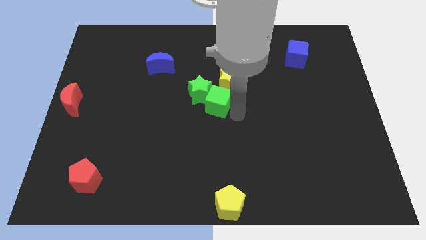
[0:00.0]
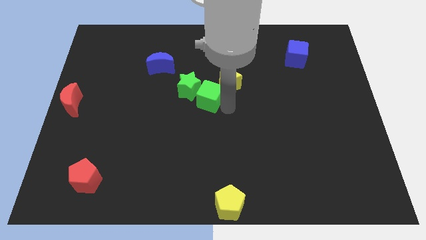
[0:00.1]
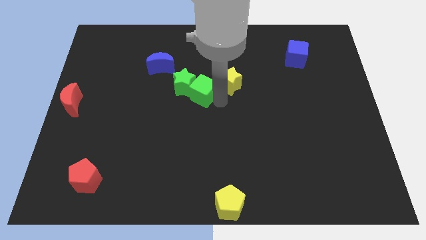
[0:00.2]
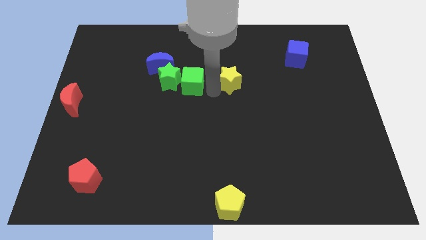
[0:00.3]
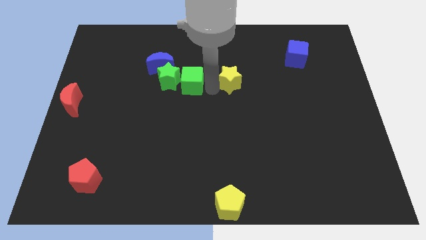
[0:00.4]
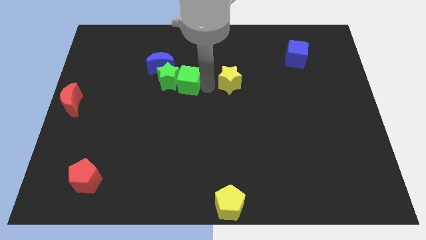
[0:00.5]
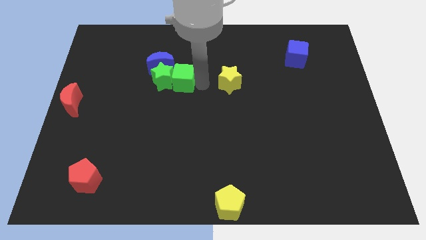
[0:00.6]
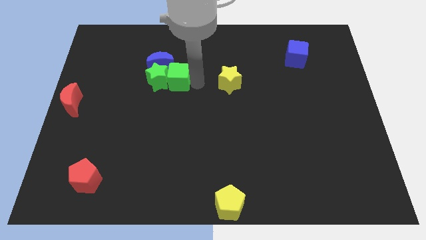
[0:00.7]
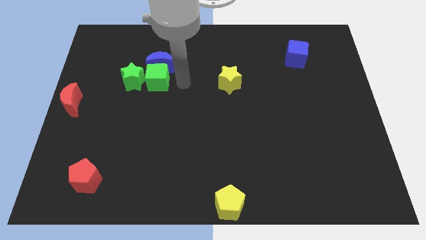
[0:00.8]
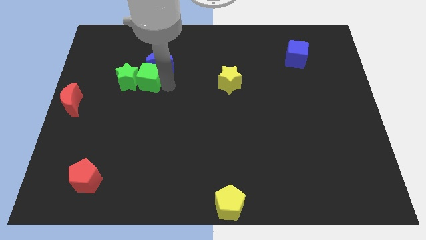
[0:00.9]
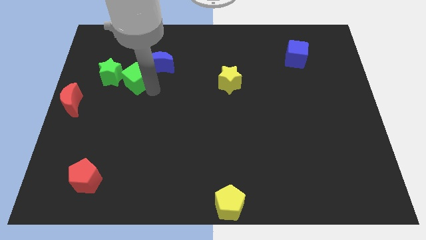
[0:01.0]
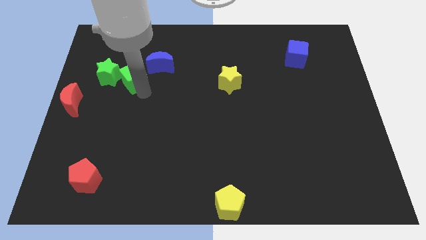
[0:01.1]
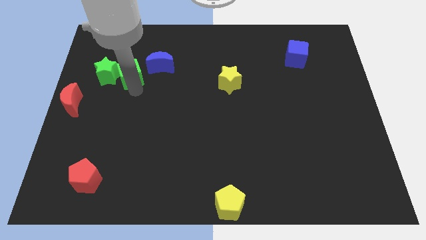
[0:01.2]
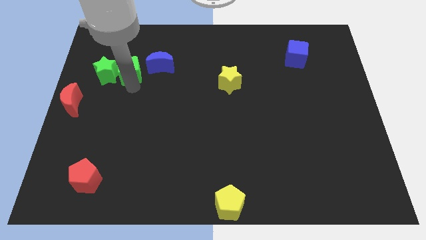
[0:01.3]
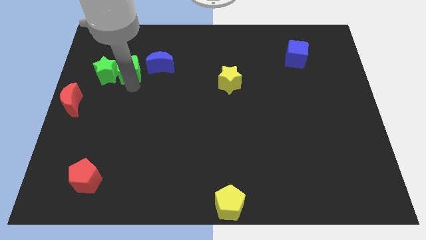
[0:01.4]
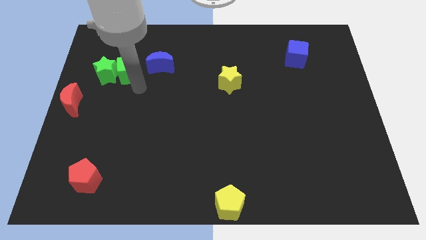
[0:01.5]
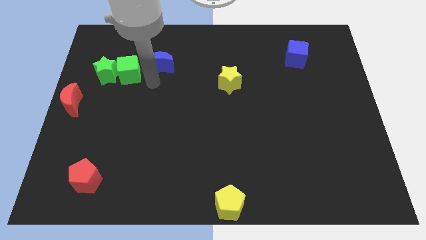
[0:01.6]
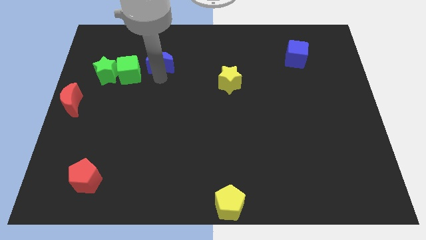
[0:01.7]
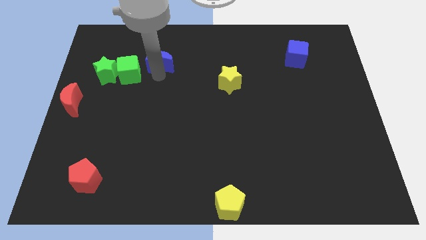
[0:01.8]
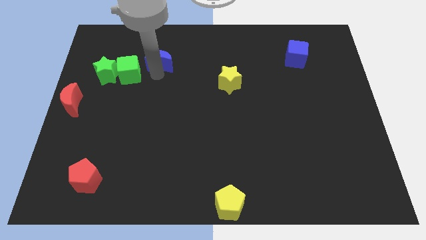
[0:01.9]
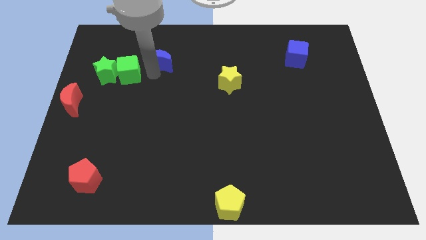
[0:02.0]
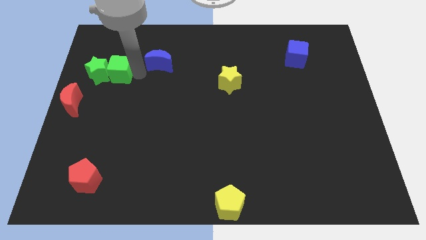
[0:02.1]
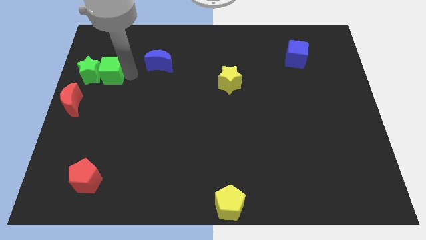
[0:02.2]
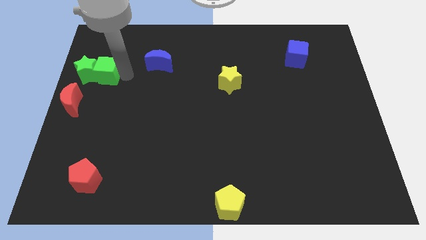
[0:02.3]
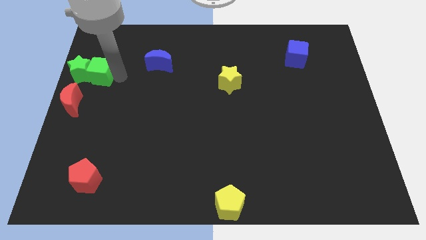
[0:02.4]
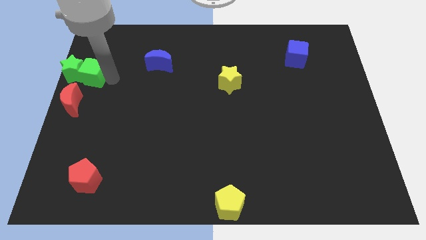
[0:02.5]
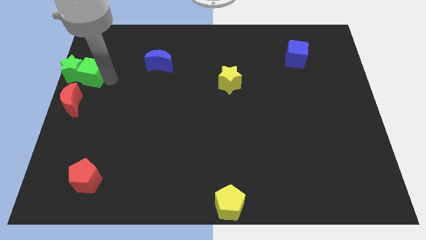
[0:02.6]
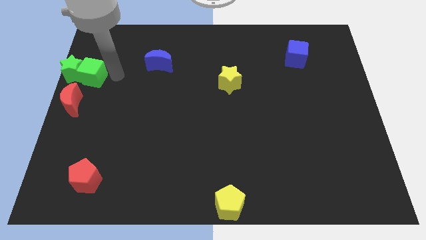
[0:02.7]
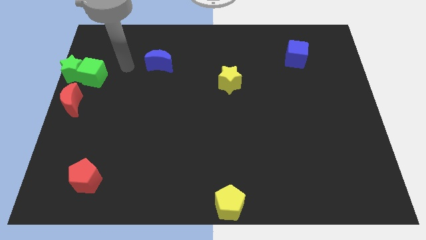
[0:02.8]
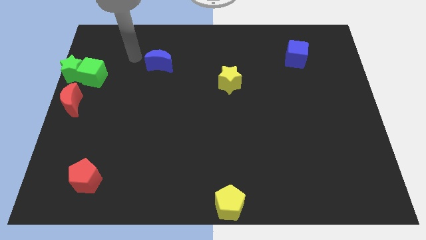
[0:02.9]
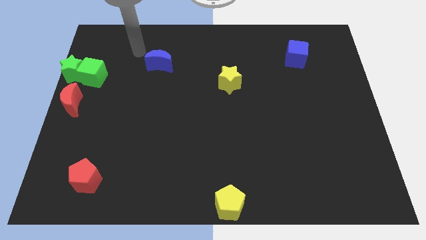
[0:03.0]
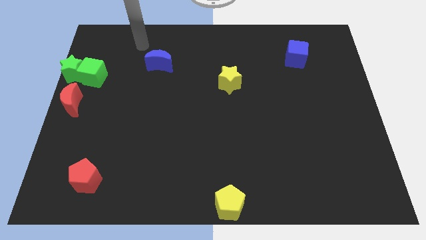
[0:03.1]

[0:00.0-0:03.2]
place the green blocks above the red crescent

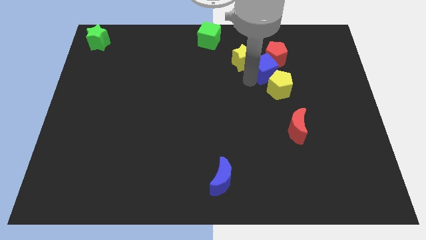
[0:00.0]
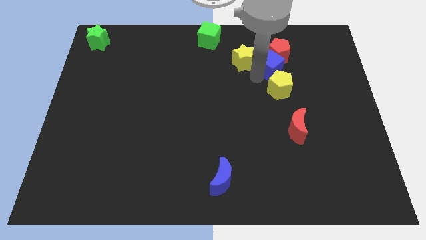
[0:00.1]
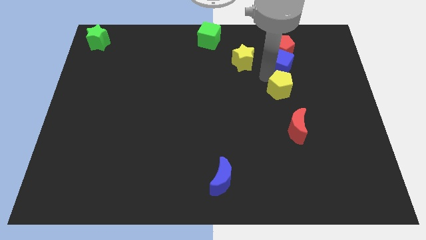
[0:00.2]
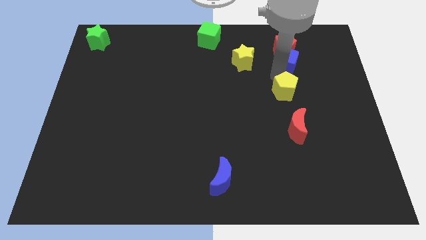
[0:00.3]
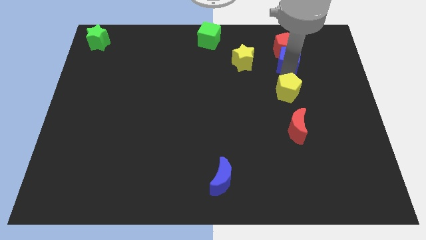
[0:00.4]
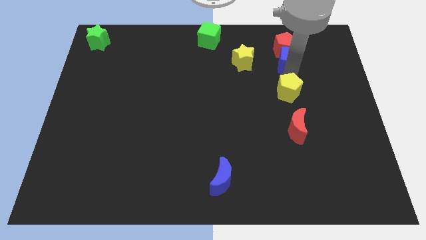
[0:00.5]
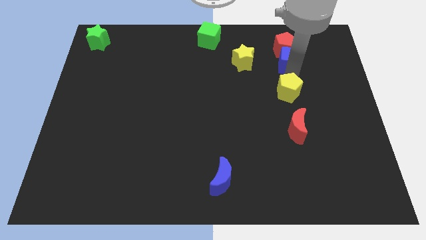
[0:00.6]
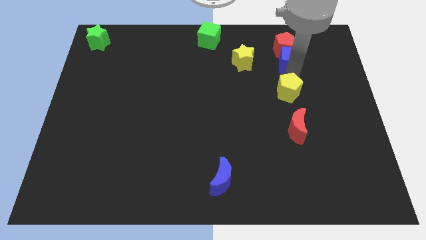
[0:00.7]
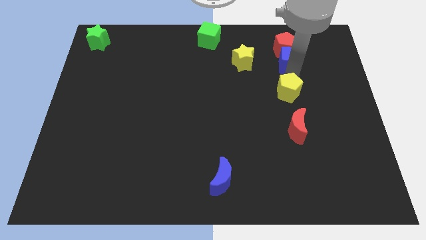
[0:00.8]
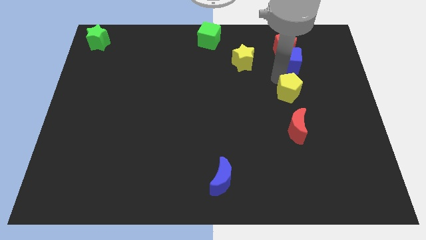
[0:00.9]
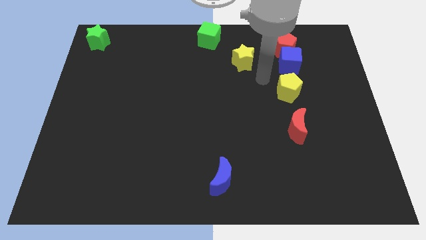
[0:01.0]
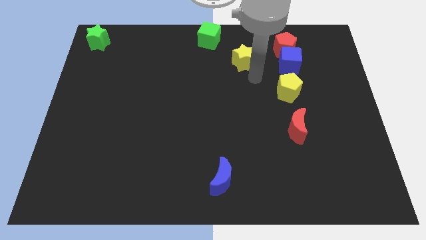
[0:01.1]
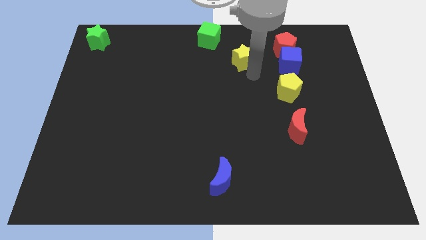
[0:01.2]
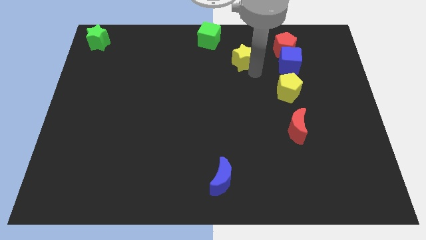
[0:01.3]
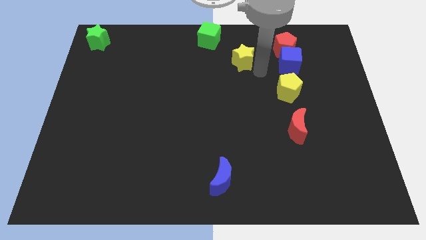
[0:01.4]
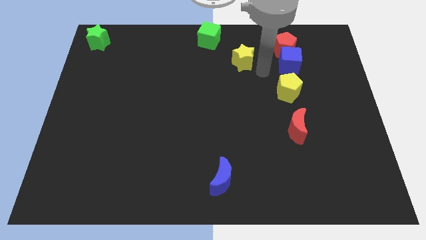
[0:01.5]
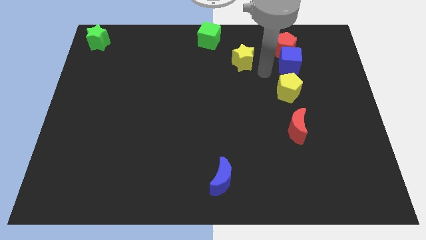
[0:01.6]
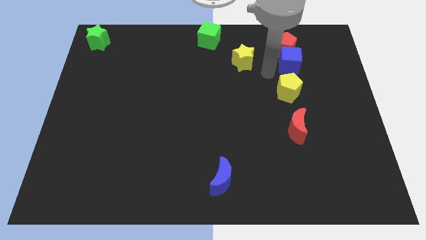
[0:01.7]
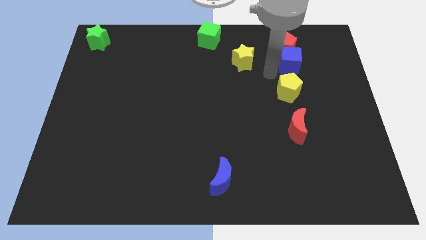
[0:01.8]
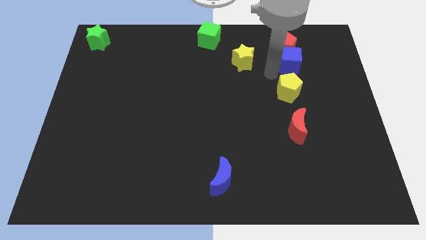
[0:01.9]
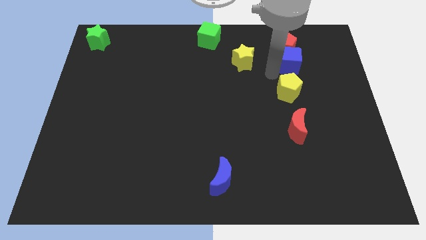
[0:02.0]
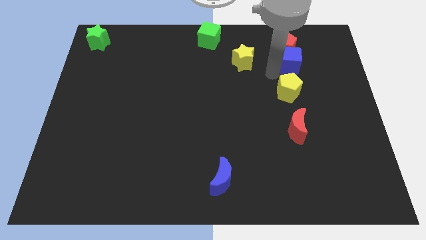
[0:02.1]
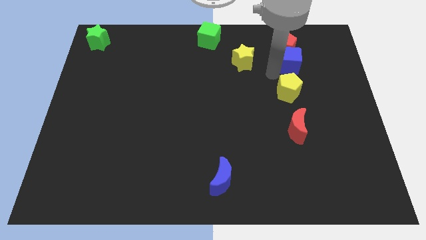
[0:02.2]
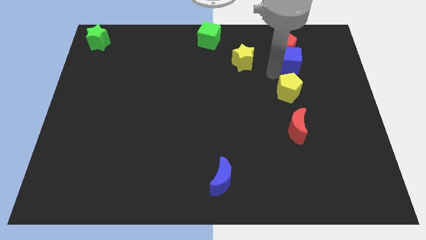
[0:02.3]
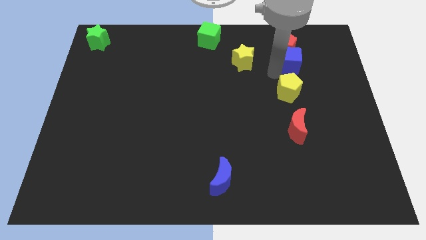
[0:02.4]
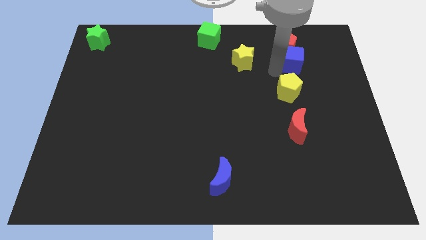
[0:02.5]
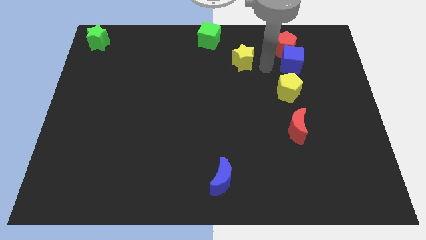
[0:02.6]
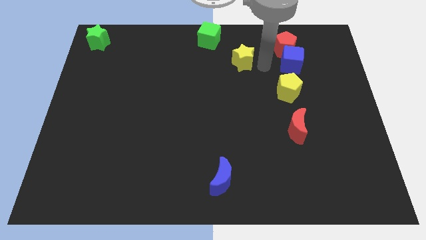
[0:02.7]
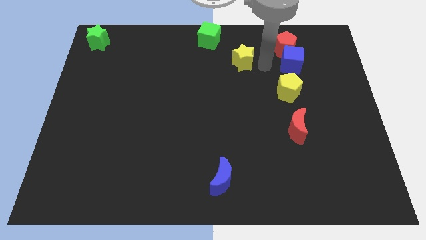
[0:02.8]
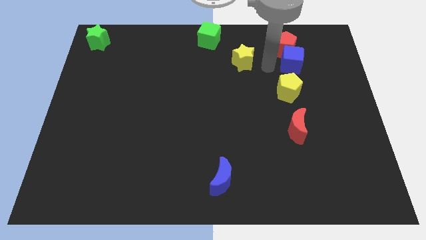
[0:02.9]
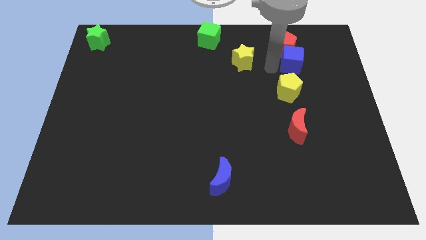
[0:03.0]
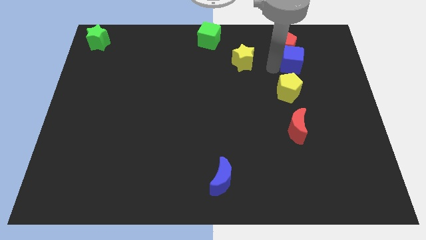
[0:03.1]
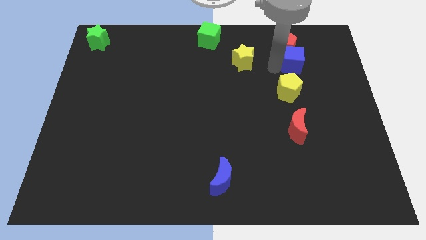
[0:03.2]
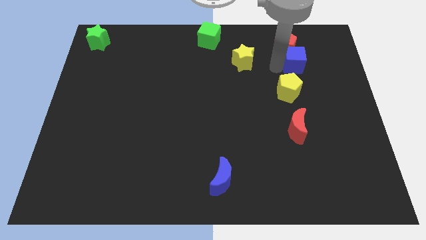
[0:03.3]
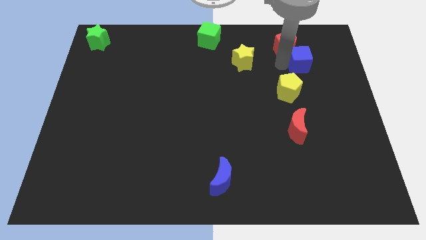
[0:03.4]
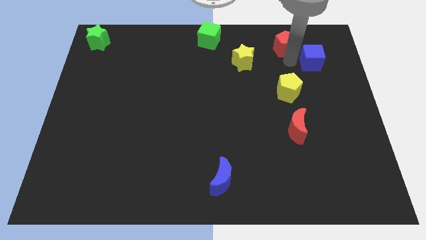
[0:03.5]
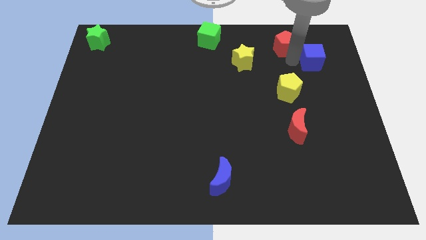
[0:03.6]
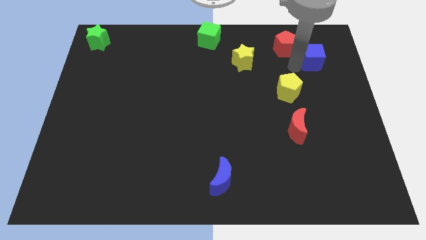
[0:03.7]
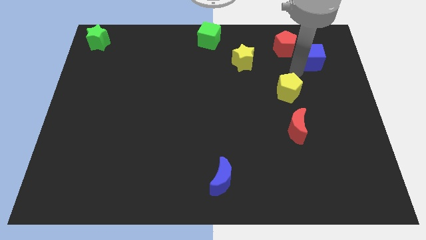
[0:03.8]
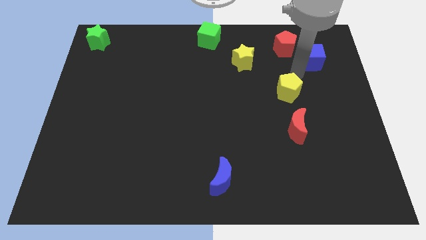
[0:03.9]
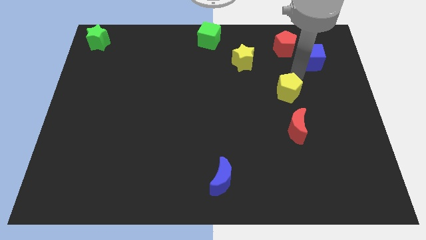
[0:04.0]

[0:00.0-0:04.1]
separate the blue cube from yellow star and yellow pentagon

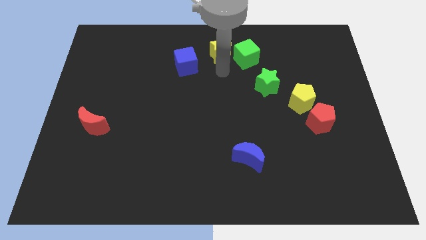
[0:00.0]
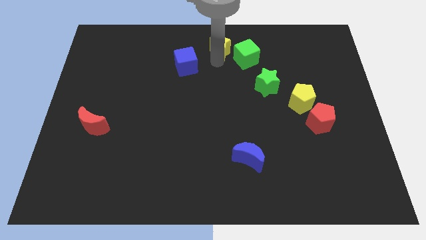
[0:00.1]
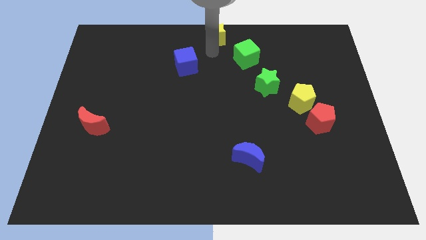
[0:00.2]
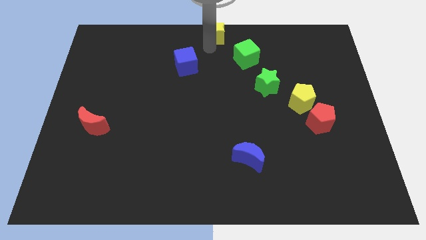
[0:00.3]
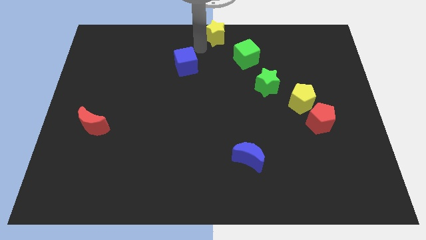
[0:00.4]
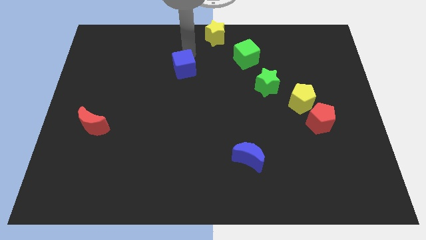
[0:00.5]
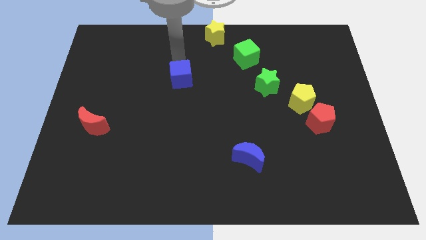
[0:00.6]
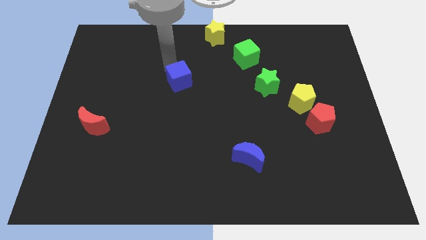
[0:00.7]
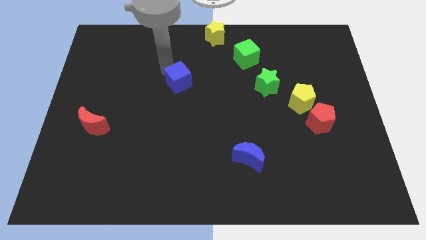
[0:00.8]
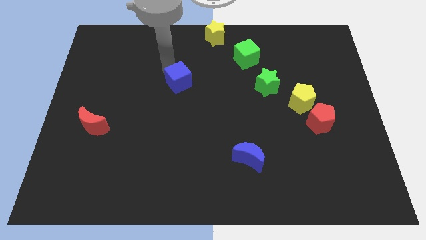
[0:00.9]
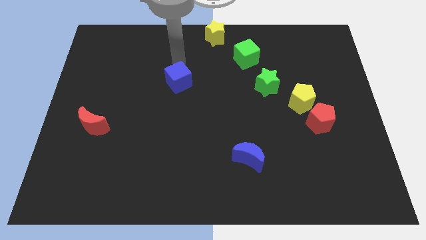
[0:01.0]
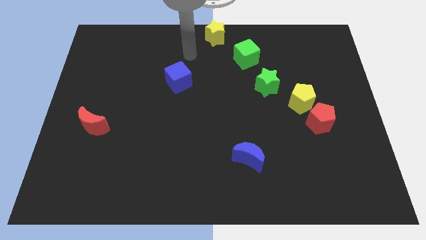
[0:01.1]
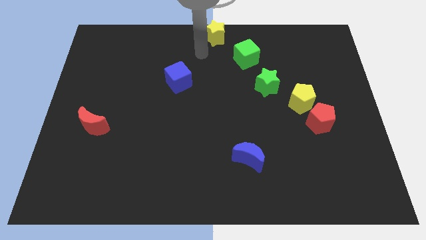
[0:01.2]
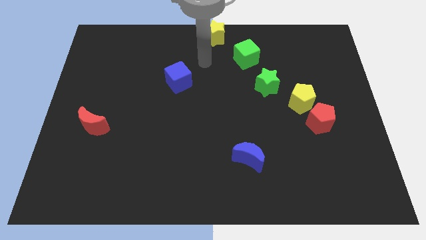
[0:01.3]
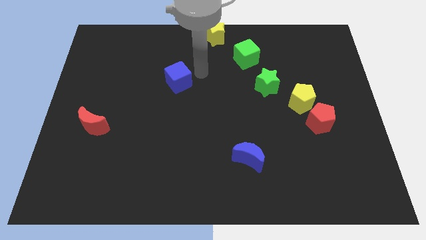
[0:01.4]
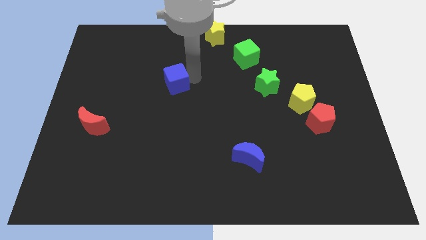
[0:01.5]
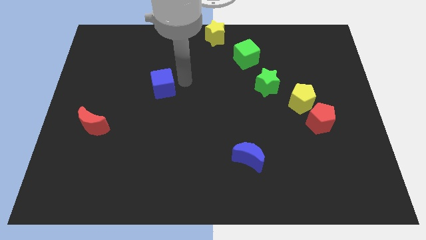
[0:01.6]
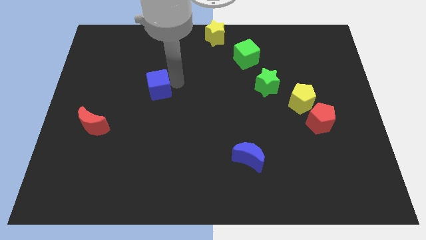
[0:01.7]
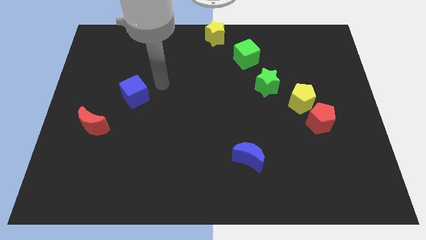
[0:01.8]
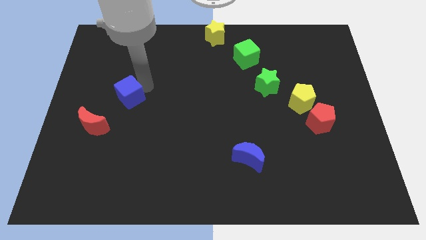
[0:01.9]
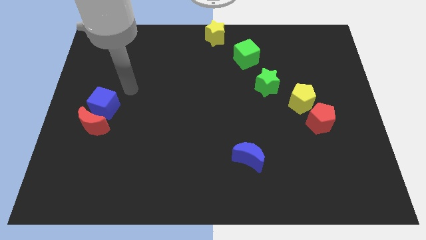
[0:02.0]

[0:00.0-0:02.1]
move the blue cube towards the red crescent
